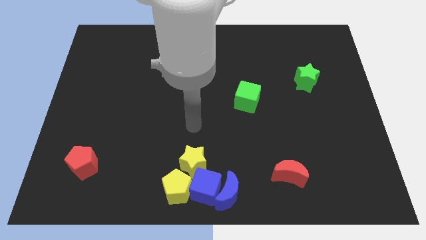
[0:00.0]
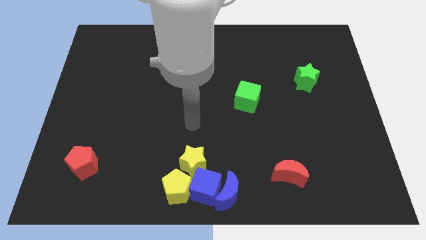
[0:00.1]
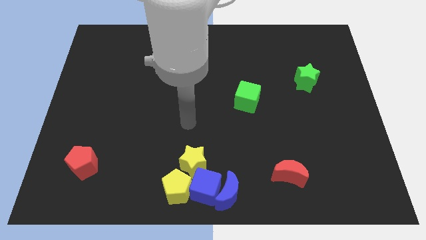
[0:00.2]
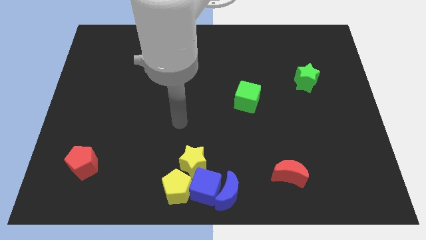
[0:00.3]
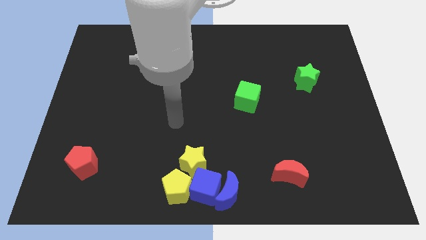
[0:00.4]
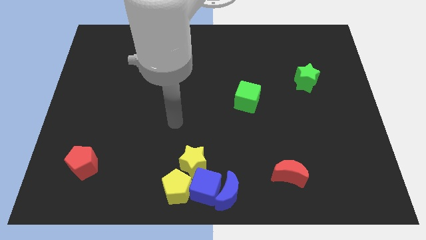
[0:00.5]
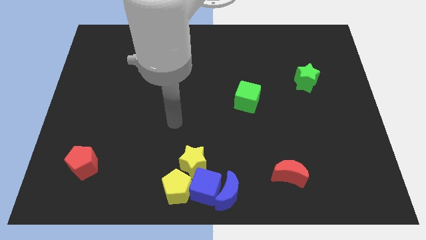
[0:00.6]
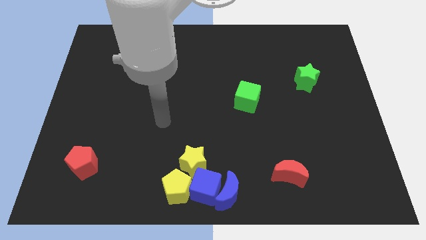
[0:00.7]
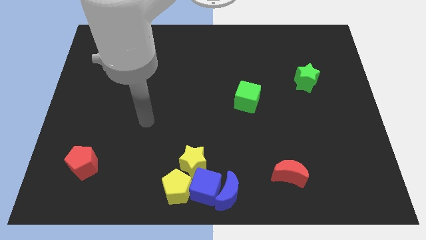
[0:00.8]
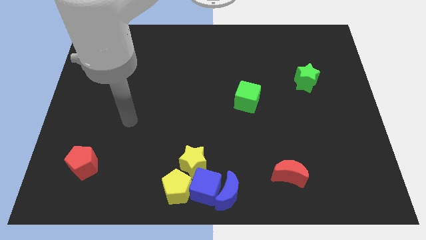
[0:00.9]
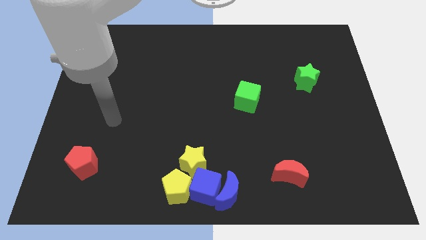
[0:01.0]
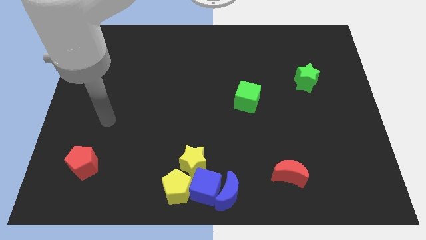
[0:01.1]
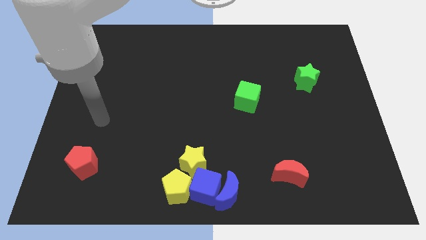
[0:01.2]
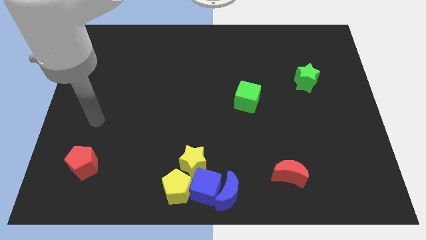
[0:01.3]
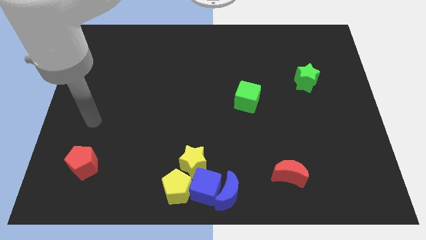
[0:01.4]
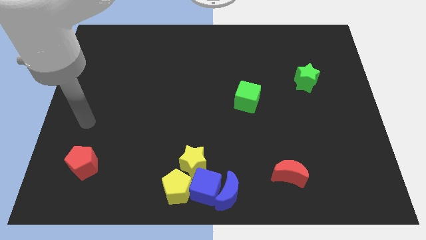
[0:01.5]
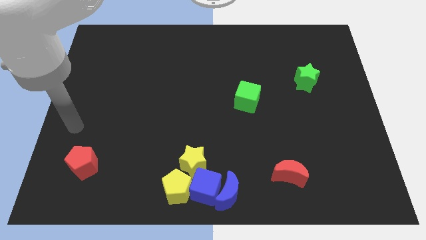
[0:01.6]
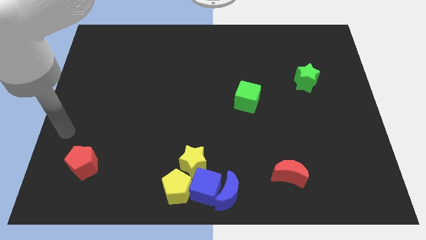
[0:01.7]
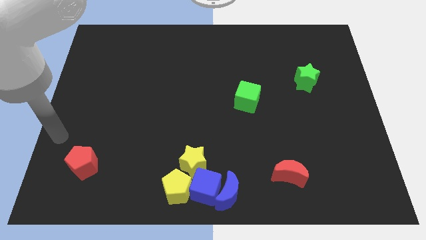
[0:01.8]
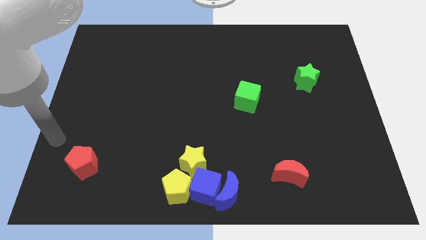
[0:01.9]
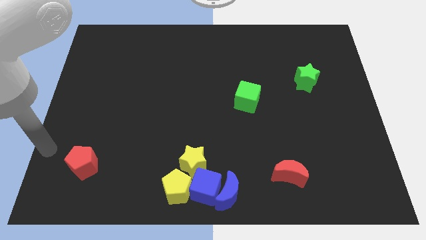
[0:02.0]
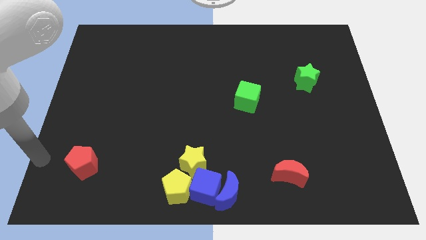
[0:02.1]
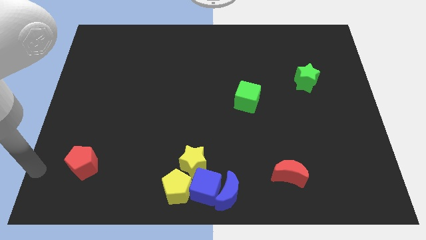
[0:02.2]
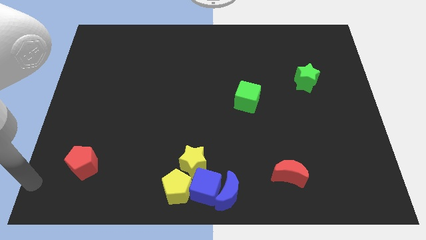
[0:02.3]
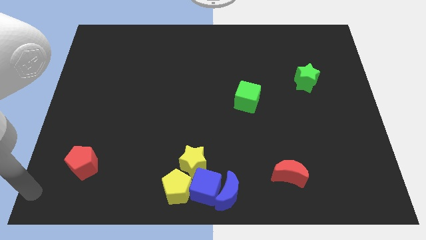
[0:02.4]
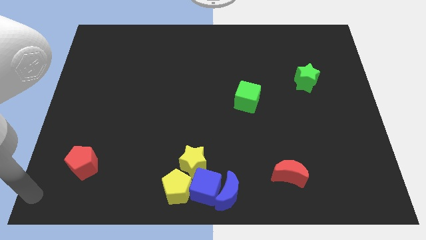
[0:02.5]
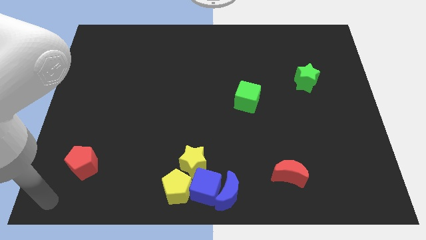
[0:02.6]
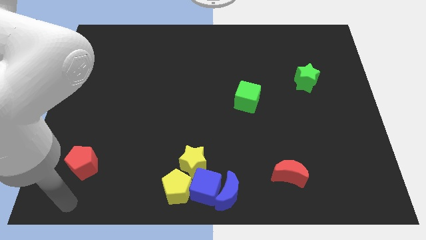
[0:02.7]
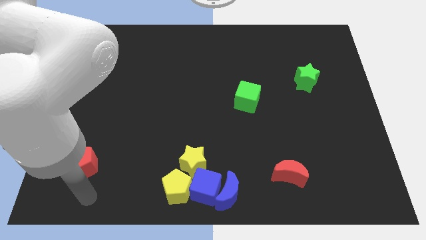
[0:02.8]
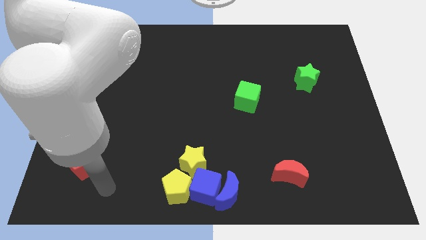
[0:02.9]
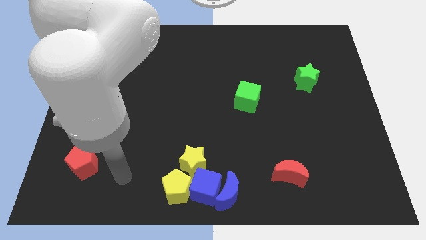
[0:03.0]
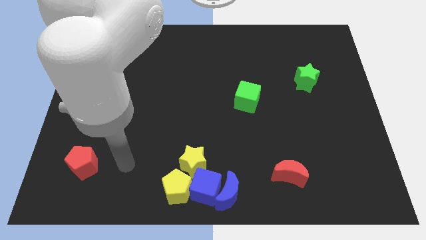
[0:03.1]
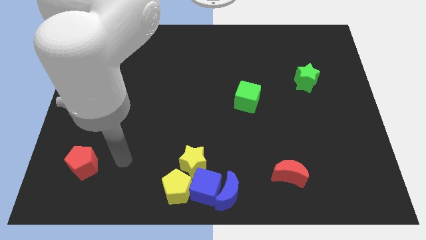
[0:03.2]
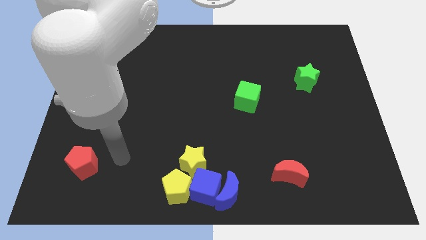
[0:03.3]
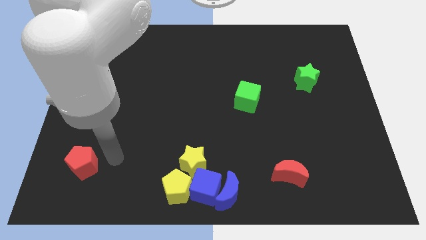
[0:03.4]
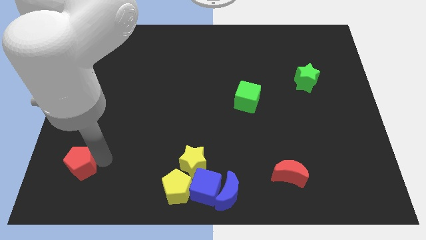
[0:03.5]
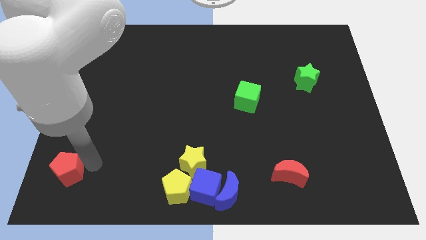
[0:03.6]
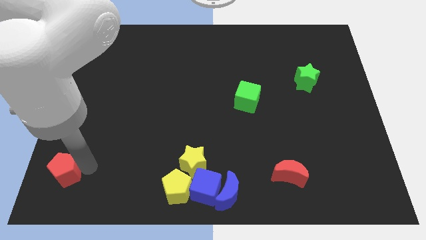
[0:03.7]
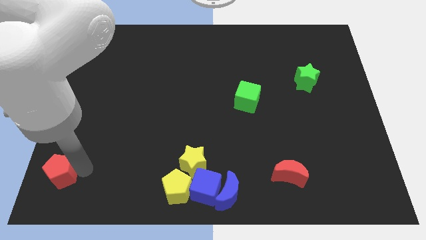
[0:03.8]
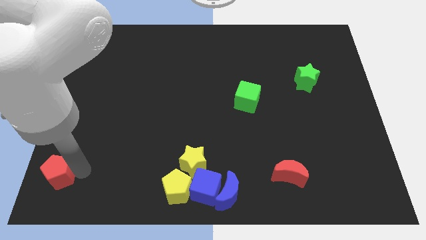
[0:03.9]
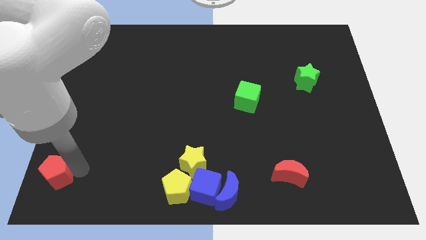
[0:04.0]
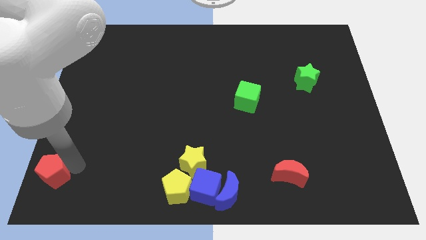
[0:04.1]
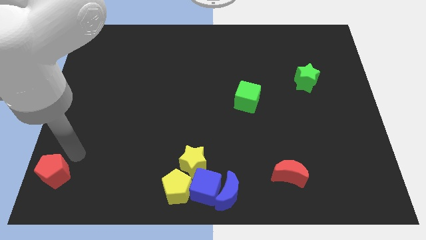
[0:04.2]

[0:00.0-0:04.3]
slide the red pentagon to the bottom left side of the table

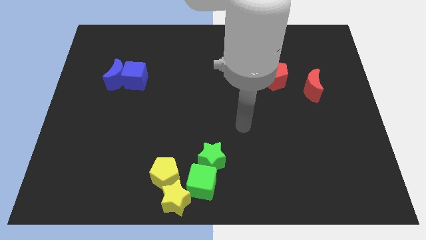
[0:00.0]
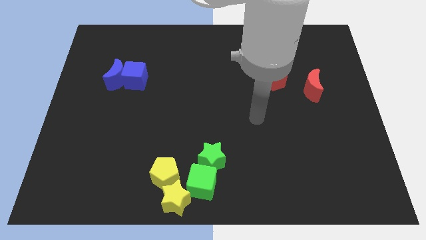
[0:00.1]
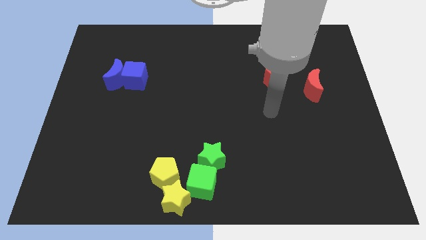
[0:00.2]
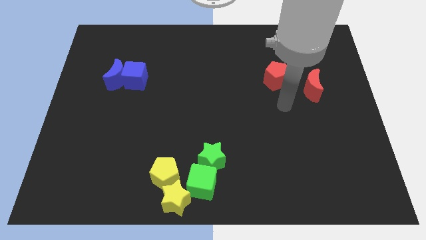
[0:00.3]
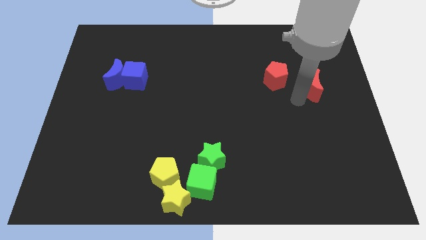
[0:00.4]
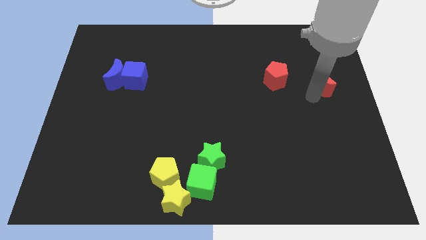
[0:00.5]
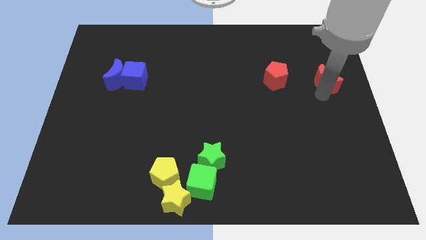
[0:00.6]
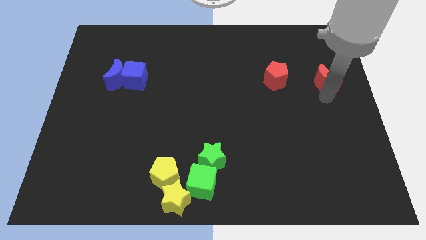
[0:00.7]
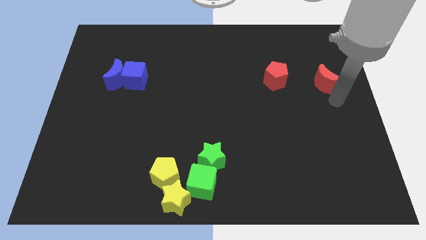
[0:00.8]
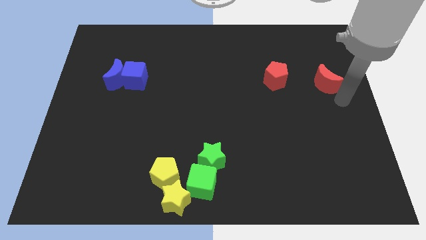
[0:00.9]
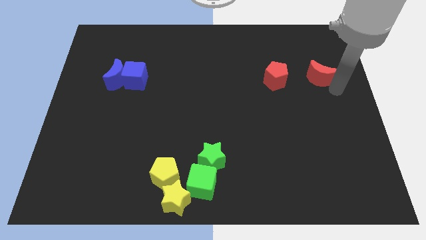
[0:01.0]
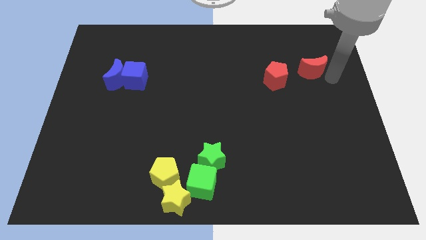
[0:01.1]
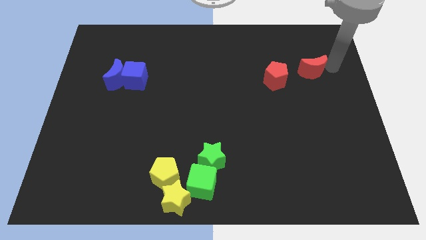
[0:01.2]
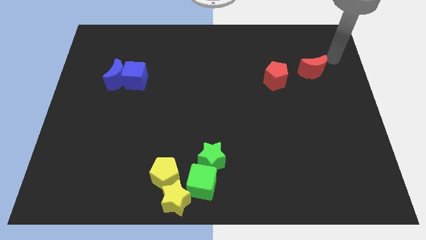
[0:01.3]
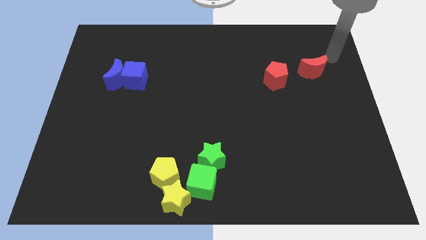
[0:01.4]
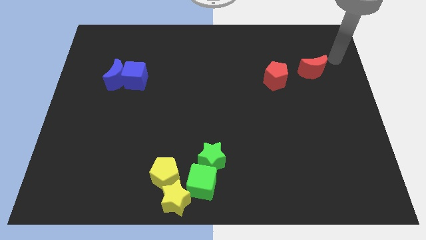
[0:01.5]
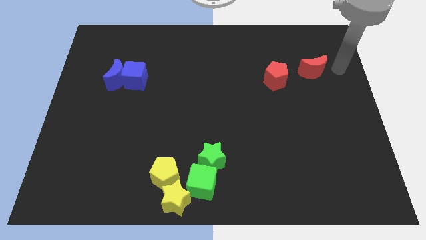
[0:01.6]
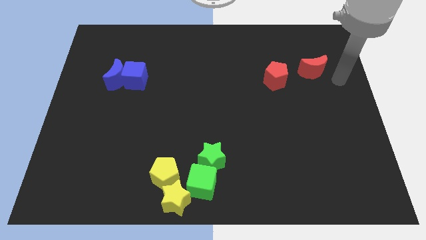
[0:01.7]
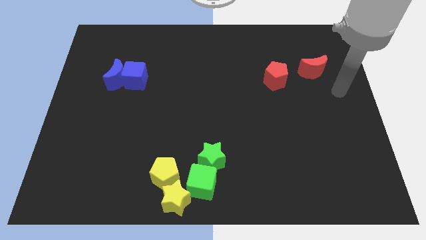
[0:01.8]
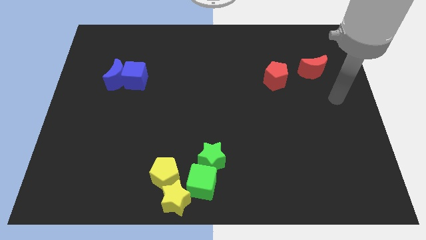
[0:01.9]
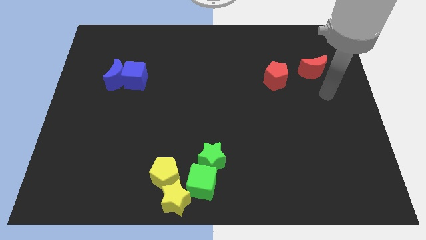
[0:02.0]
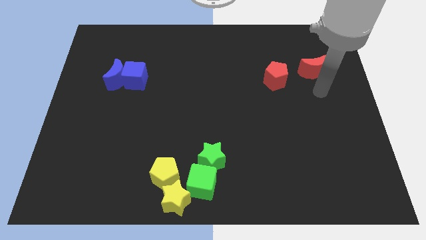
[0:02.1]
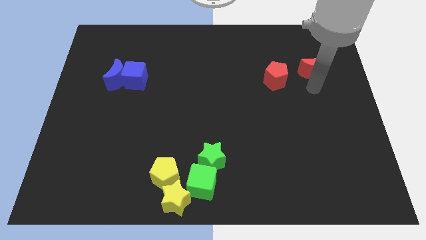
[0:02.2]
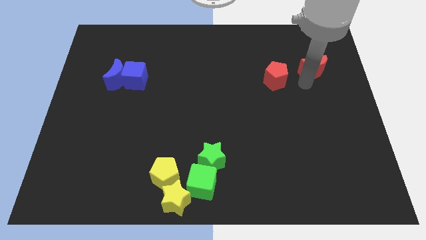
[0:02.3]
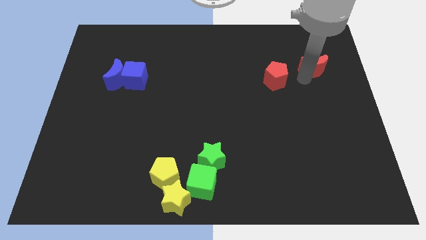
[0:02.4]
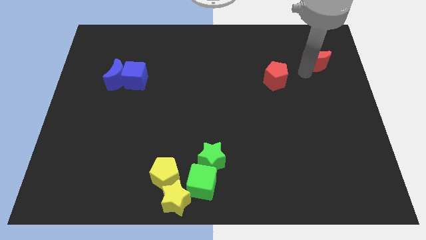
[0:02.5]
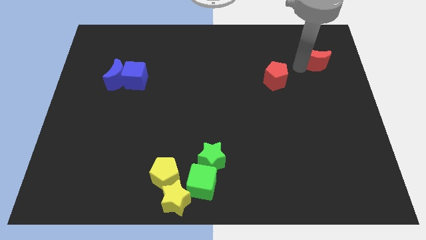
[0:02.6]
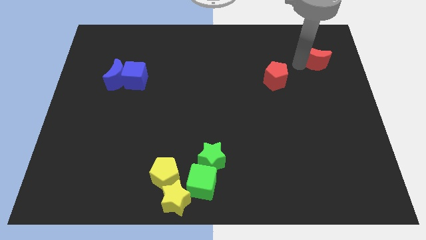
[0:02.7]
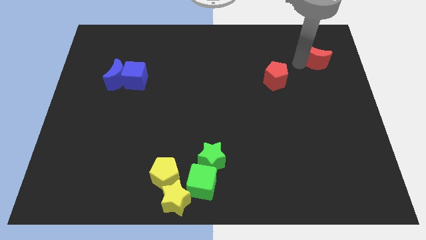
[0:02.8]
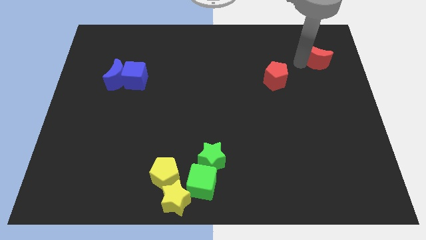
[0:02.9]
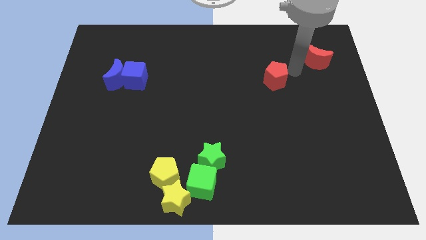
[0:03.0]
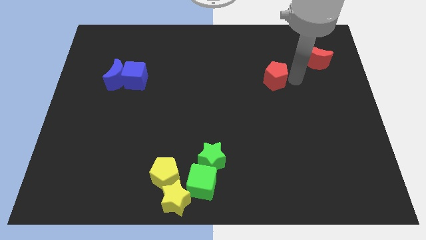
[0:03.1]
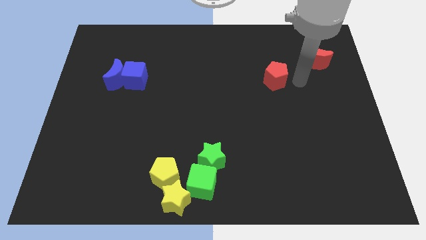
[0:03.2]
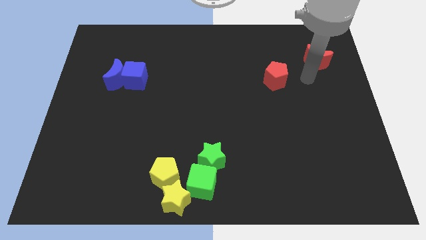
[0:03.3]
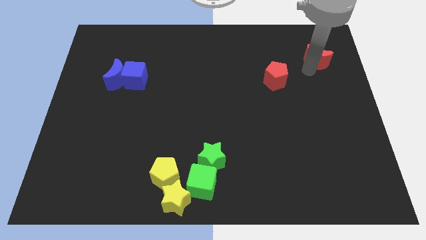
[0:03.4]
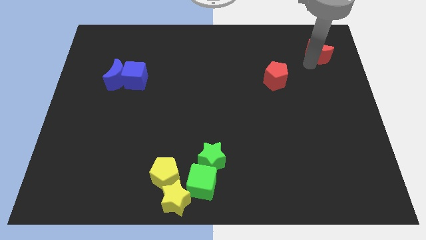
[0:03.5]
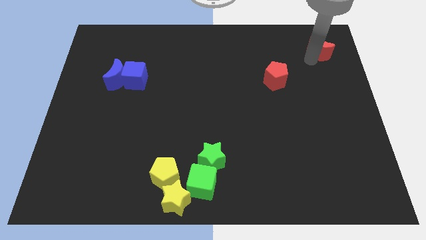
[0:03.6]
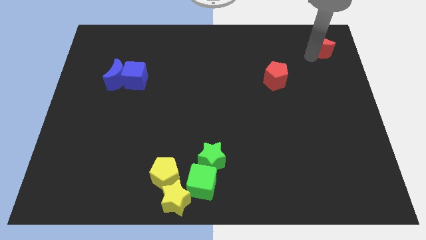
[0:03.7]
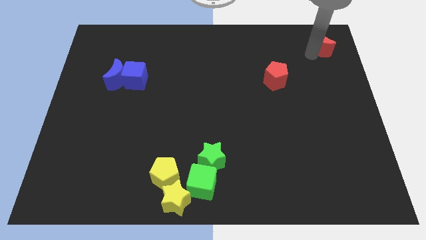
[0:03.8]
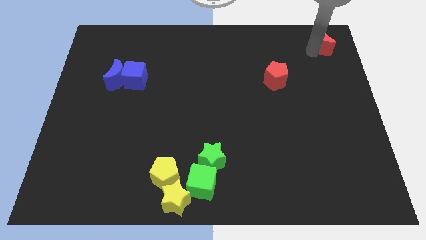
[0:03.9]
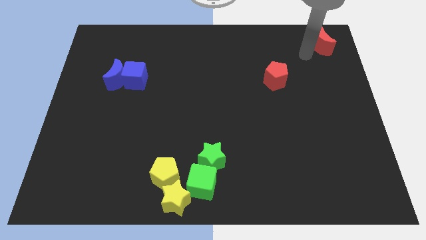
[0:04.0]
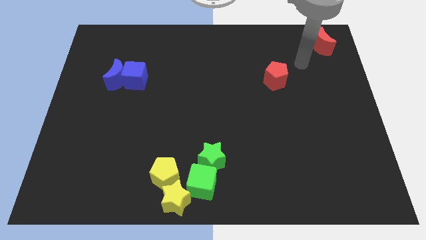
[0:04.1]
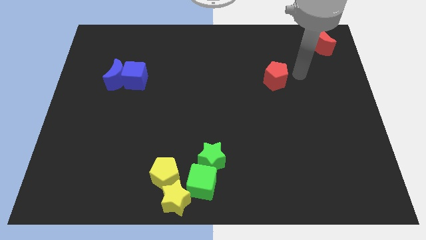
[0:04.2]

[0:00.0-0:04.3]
move red moon towards top right corner of the board

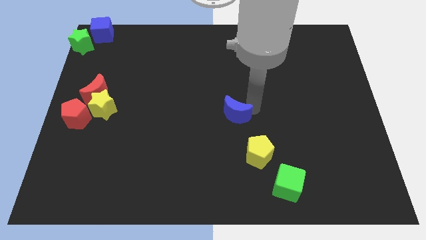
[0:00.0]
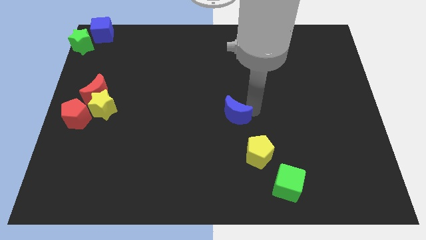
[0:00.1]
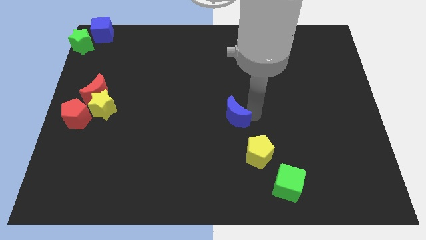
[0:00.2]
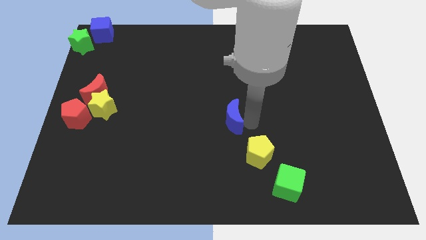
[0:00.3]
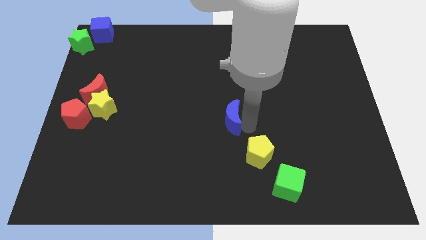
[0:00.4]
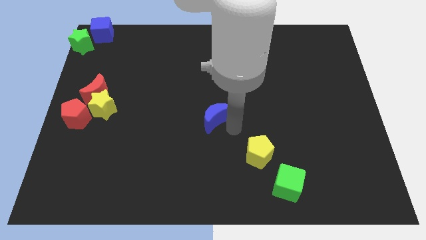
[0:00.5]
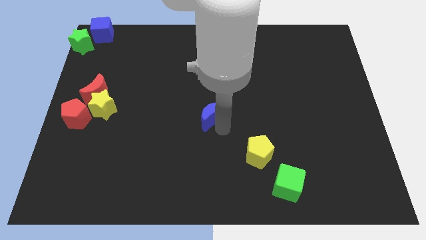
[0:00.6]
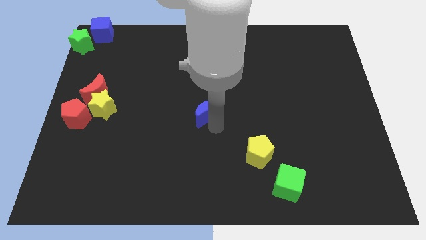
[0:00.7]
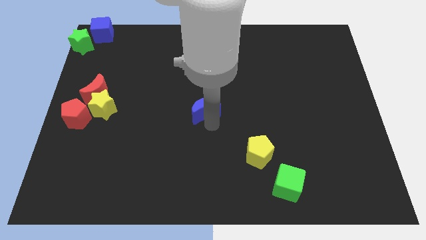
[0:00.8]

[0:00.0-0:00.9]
move the blue crescent to the center of the board
